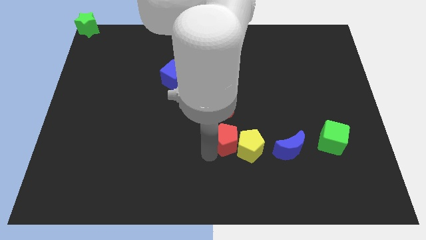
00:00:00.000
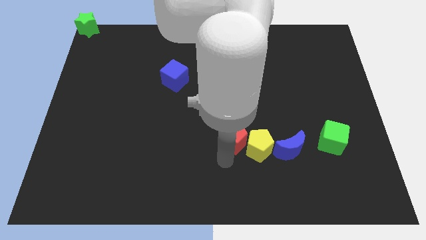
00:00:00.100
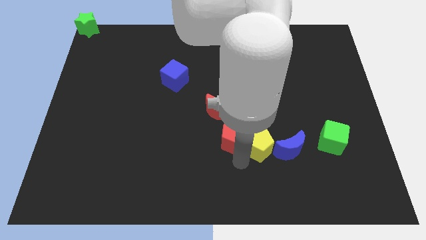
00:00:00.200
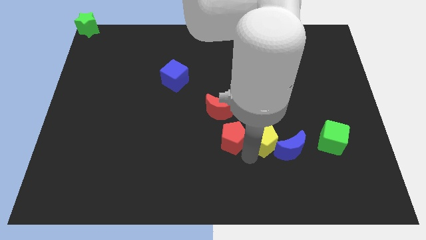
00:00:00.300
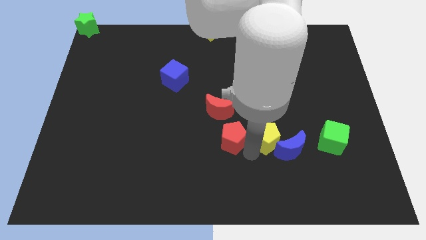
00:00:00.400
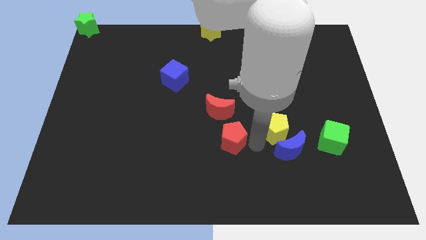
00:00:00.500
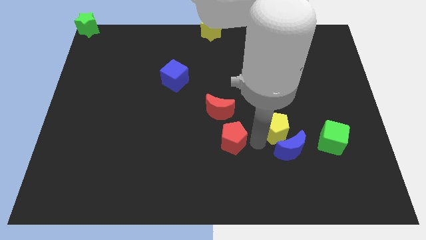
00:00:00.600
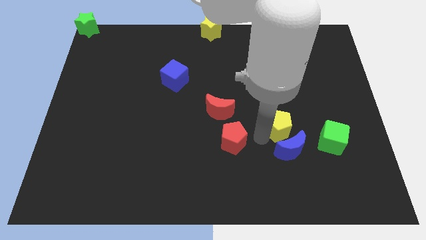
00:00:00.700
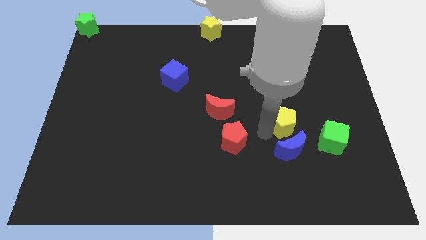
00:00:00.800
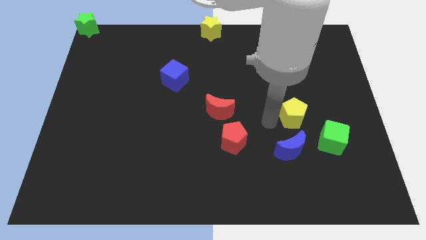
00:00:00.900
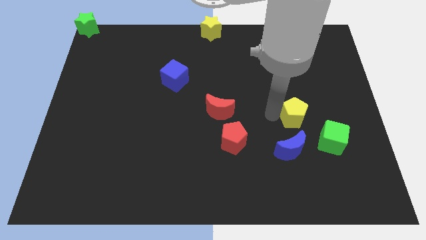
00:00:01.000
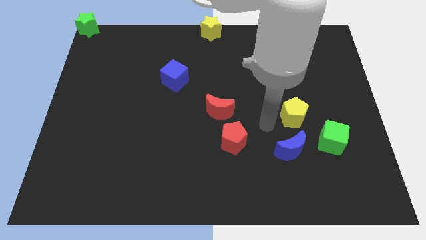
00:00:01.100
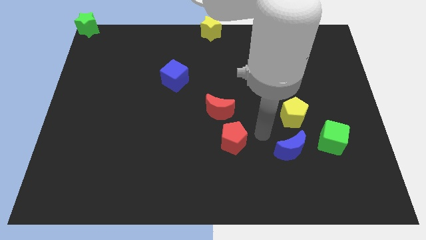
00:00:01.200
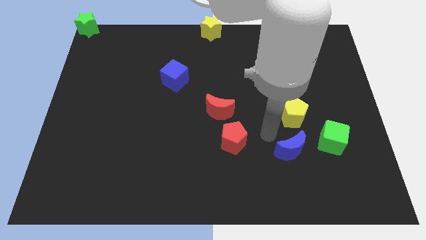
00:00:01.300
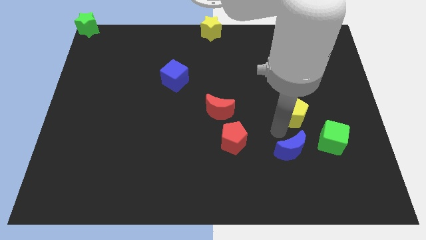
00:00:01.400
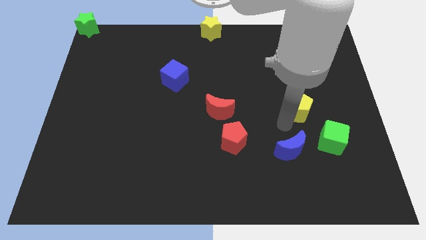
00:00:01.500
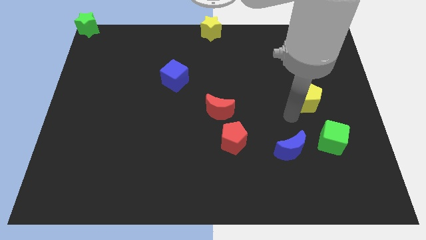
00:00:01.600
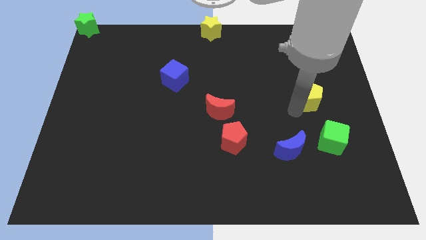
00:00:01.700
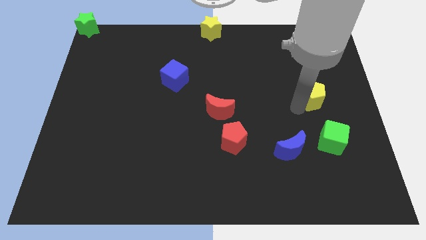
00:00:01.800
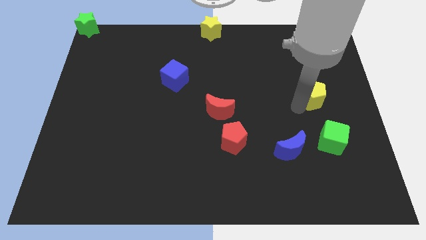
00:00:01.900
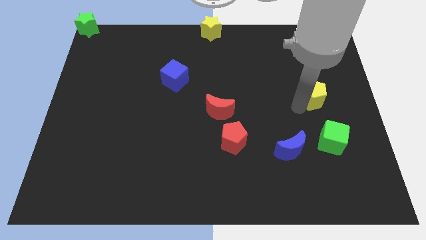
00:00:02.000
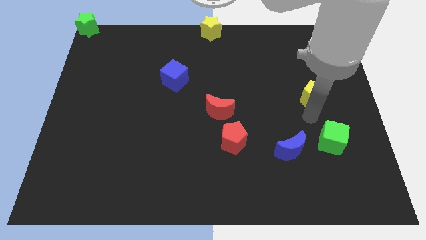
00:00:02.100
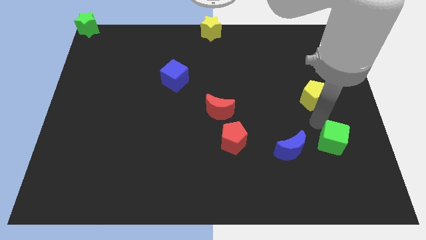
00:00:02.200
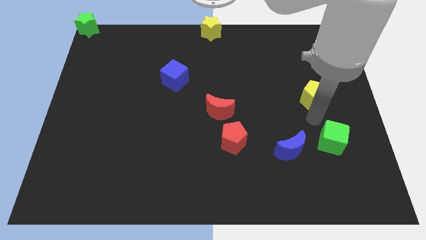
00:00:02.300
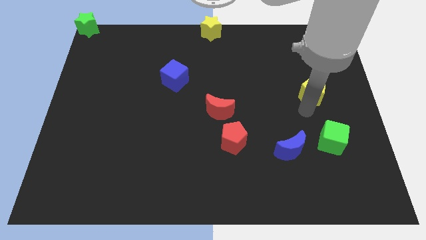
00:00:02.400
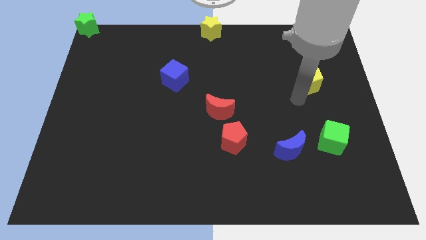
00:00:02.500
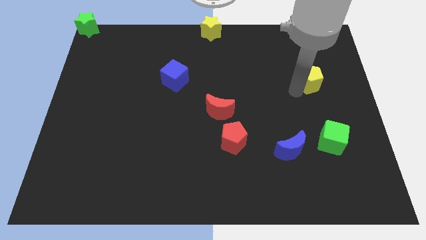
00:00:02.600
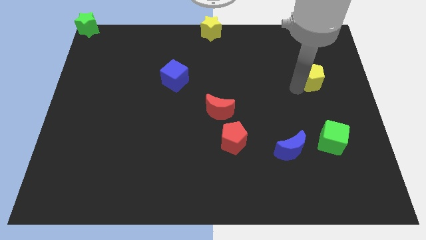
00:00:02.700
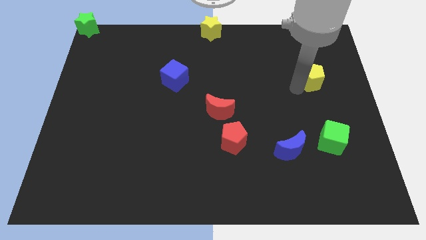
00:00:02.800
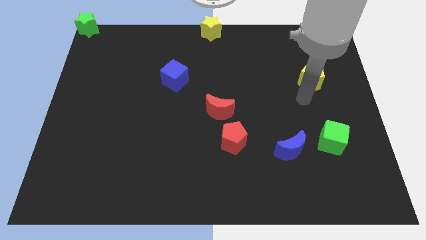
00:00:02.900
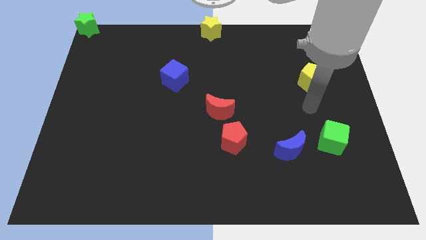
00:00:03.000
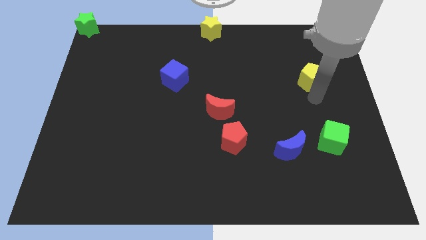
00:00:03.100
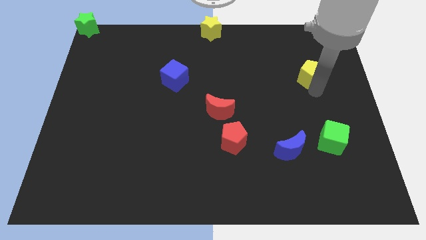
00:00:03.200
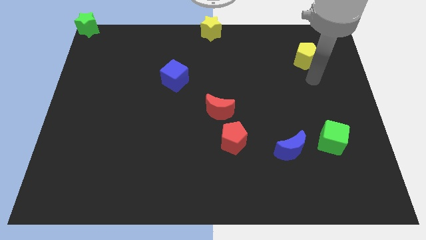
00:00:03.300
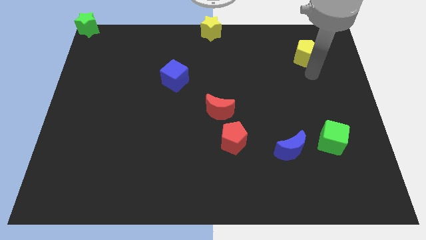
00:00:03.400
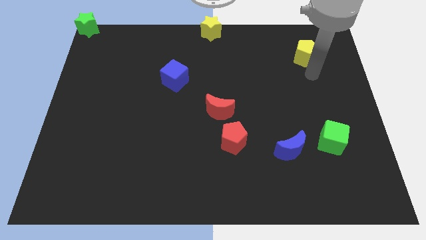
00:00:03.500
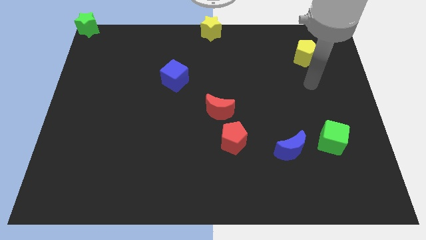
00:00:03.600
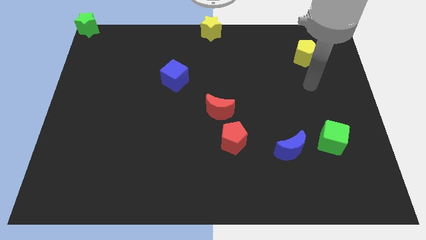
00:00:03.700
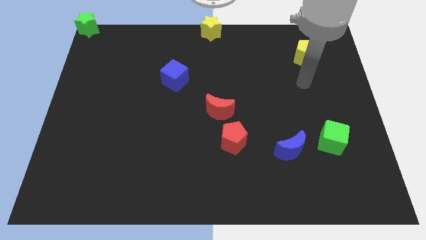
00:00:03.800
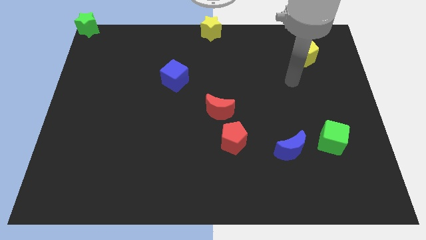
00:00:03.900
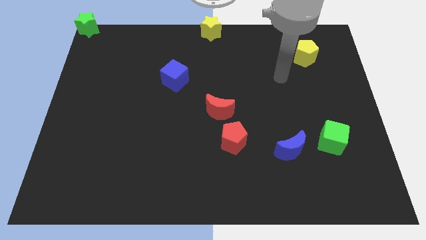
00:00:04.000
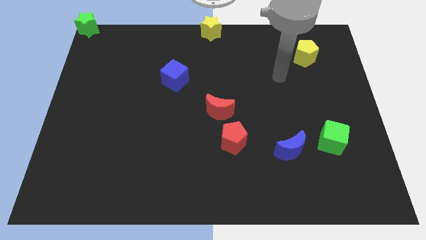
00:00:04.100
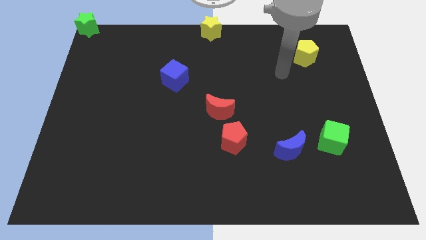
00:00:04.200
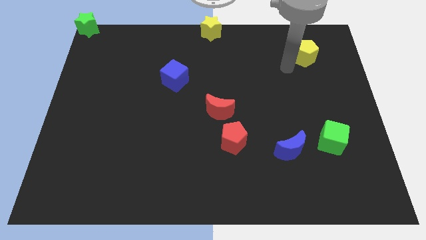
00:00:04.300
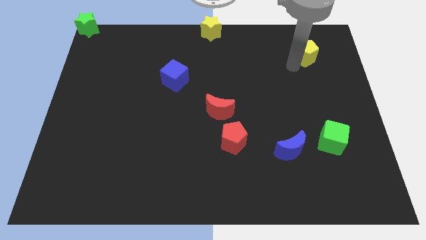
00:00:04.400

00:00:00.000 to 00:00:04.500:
separate the yellow pentagon from the red pentagon

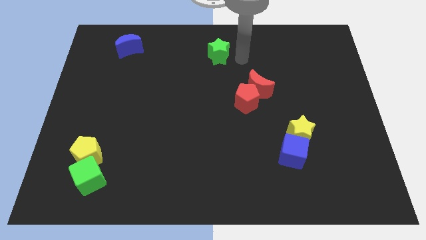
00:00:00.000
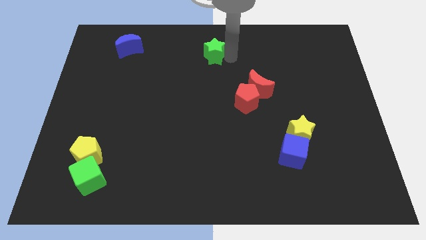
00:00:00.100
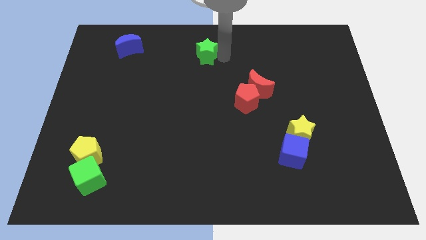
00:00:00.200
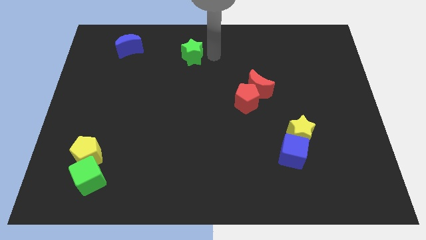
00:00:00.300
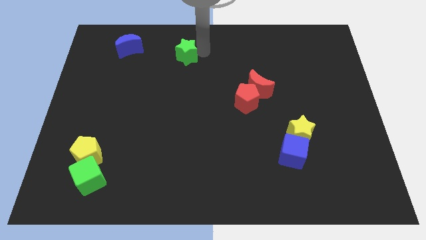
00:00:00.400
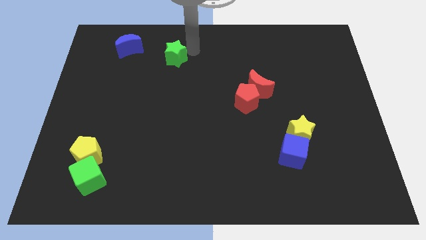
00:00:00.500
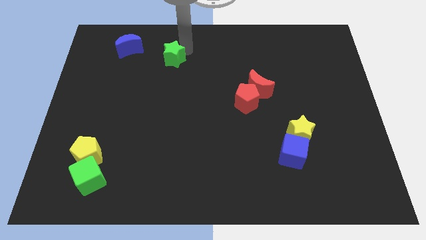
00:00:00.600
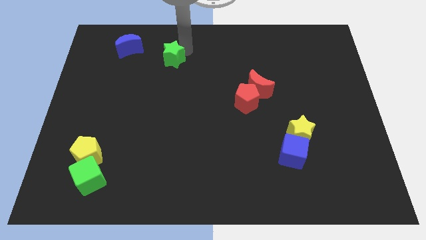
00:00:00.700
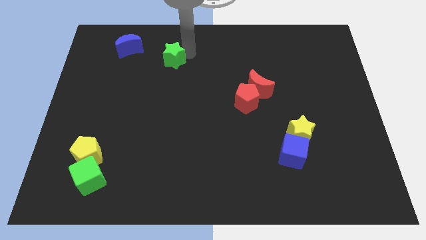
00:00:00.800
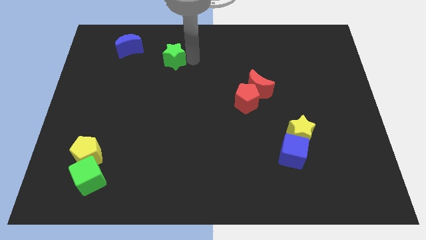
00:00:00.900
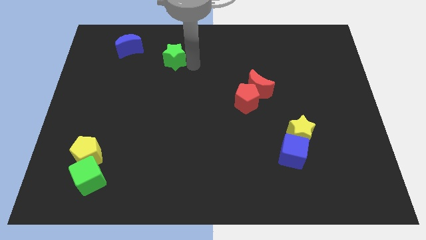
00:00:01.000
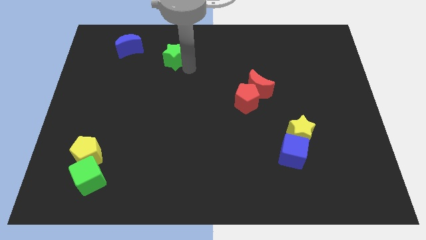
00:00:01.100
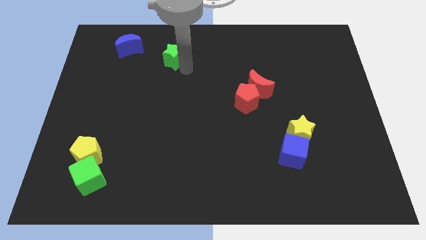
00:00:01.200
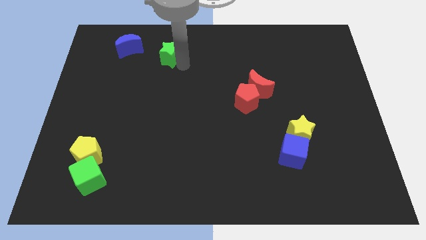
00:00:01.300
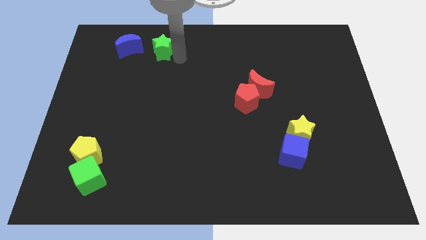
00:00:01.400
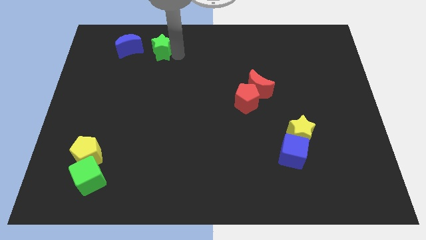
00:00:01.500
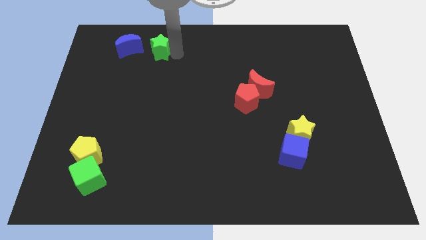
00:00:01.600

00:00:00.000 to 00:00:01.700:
drag the green star to the left

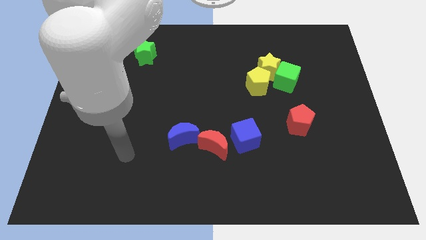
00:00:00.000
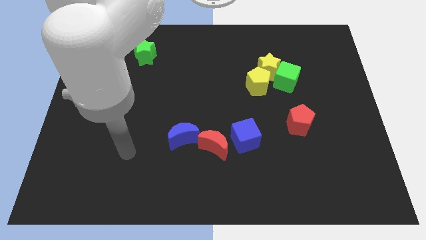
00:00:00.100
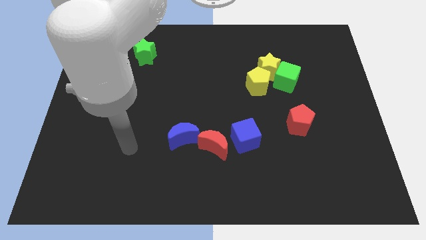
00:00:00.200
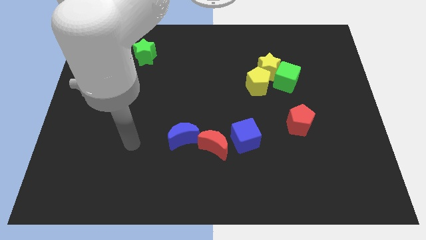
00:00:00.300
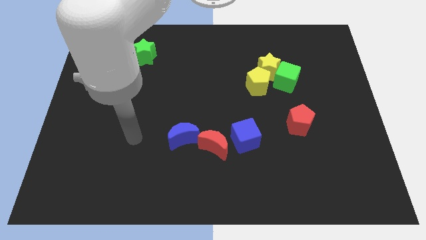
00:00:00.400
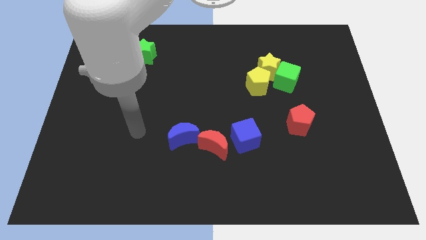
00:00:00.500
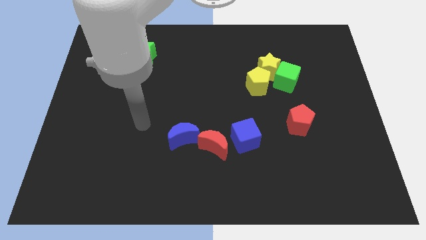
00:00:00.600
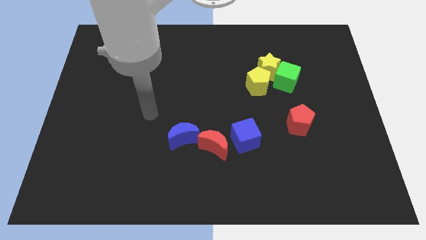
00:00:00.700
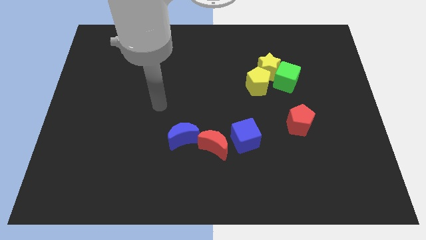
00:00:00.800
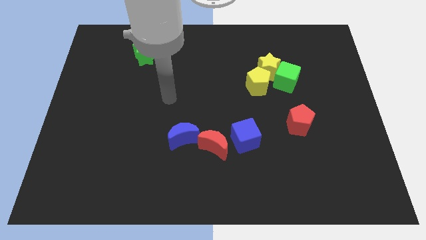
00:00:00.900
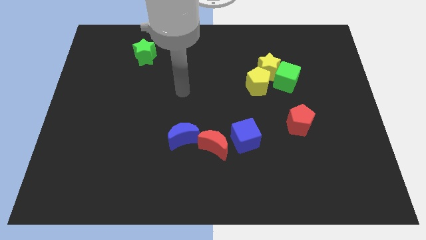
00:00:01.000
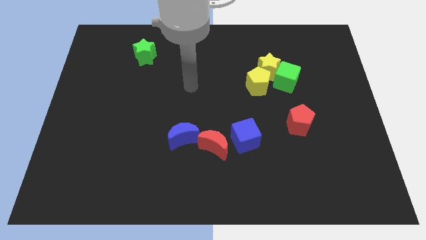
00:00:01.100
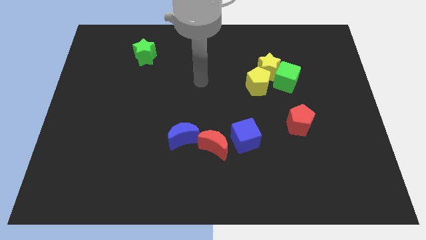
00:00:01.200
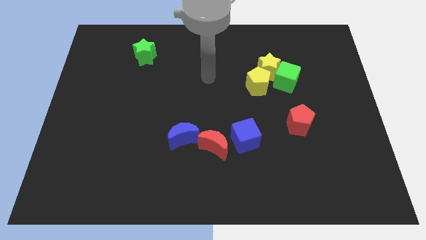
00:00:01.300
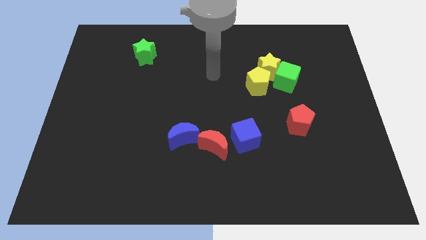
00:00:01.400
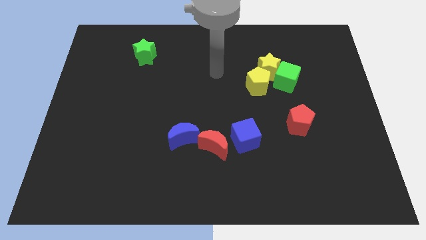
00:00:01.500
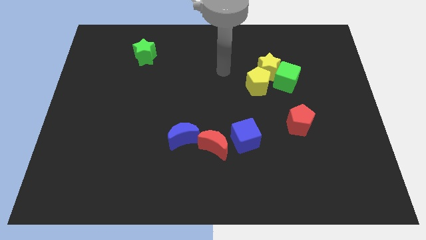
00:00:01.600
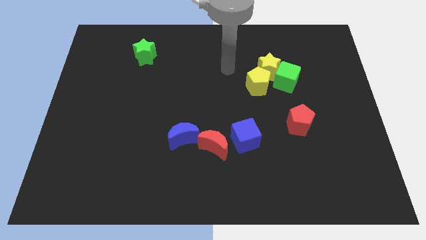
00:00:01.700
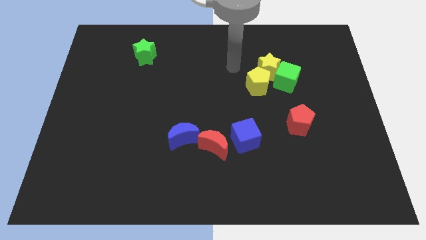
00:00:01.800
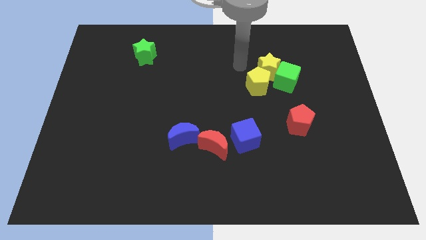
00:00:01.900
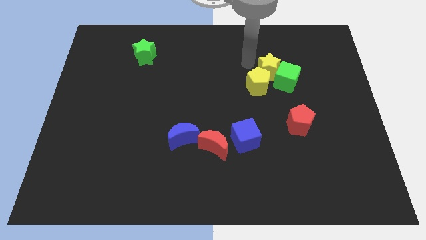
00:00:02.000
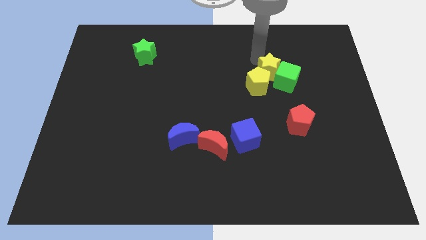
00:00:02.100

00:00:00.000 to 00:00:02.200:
place your arm above yellow star

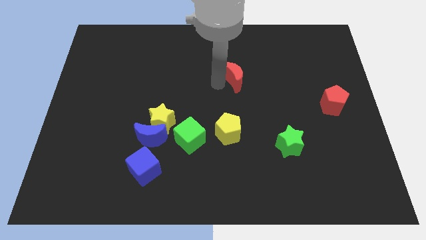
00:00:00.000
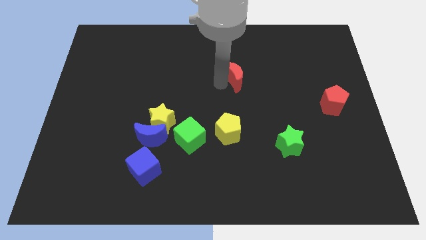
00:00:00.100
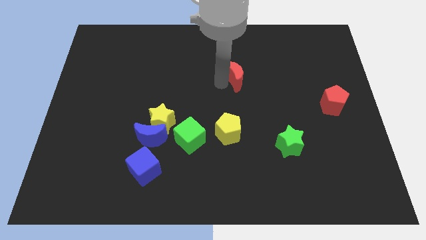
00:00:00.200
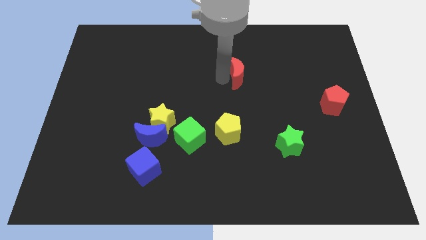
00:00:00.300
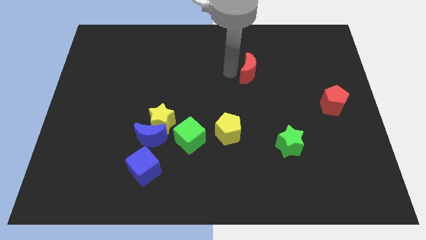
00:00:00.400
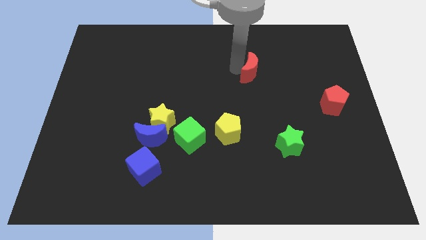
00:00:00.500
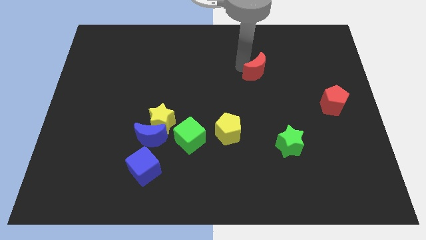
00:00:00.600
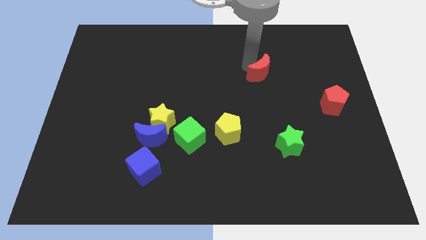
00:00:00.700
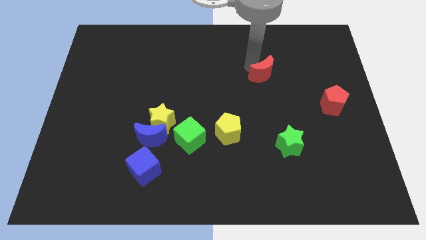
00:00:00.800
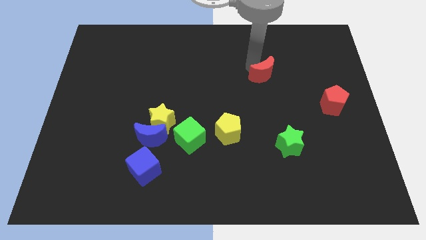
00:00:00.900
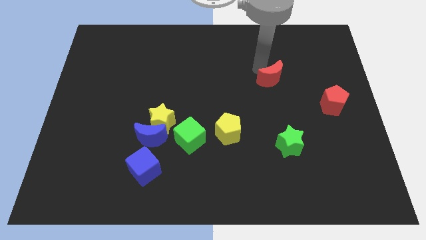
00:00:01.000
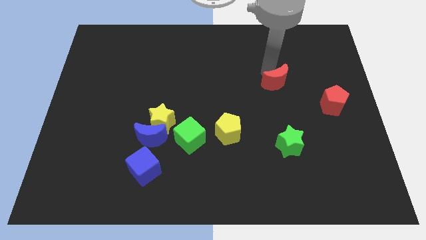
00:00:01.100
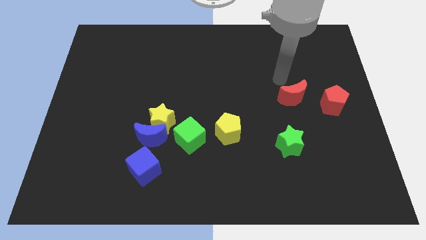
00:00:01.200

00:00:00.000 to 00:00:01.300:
place the red crescent vertically above the green star
